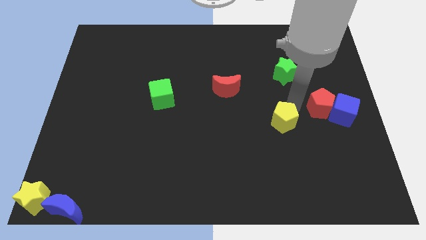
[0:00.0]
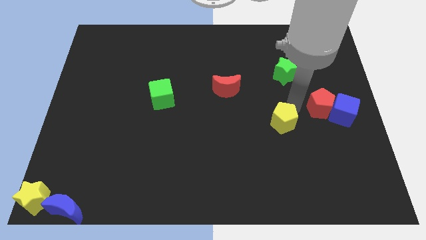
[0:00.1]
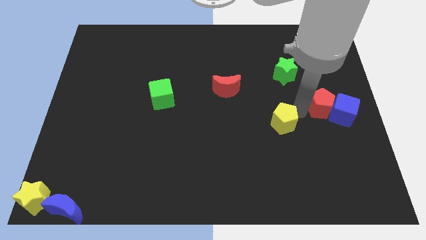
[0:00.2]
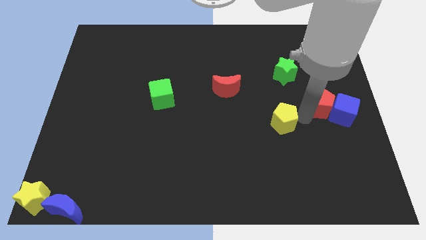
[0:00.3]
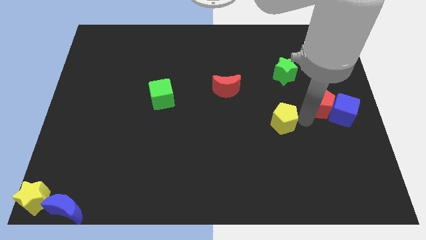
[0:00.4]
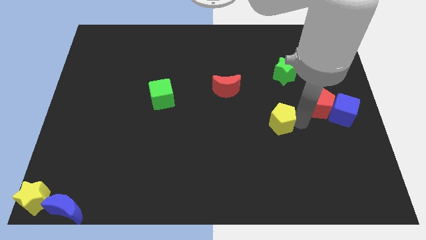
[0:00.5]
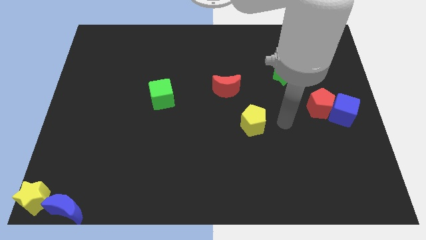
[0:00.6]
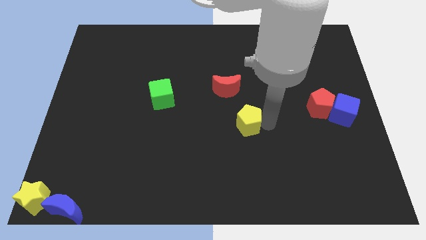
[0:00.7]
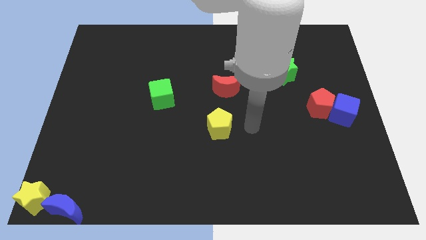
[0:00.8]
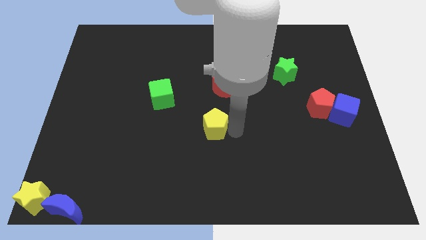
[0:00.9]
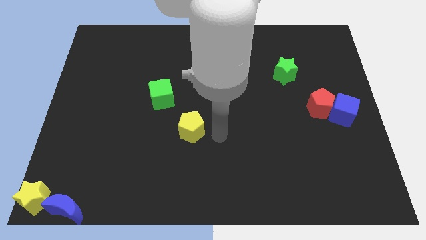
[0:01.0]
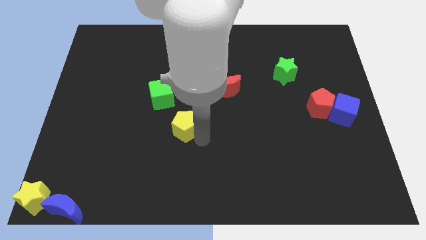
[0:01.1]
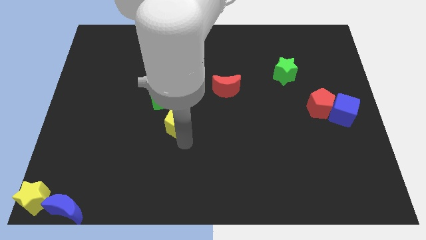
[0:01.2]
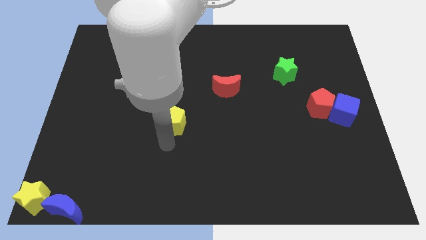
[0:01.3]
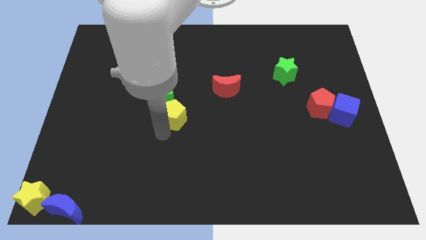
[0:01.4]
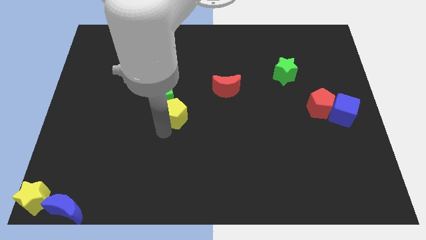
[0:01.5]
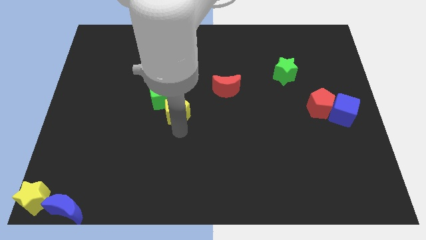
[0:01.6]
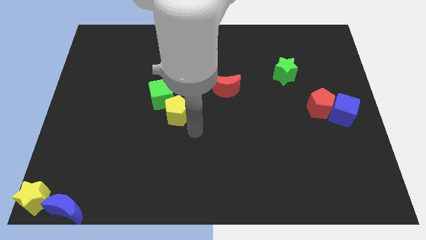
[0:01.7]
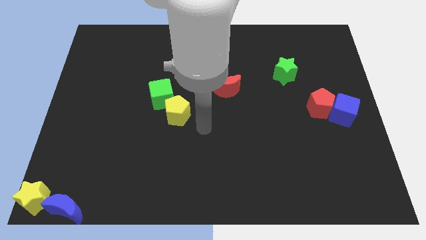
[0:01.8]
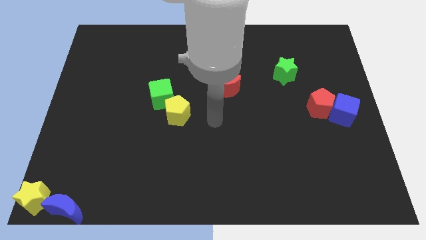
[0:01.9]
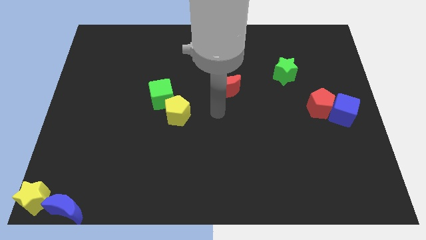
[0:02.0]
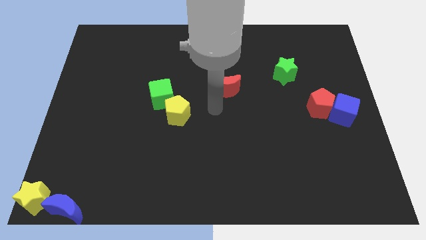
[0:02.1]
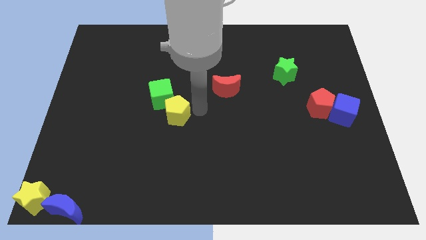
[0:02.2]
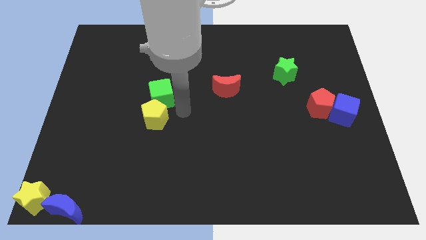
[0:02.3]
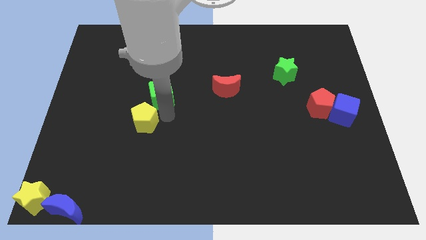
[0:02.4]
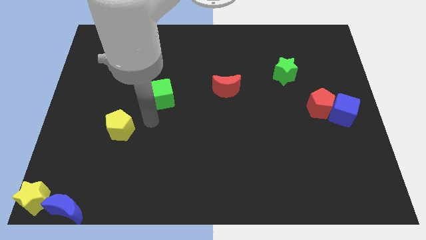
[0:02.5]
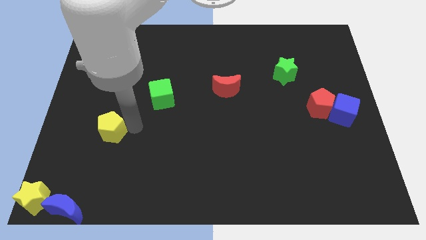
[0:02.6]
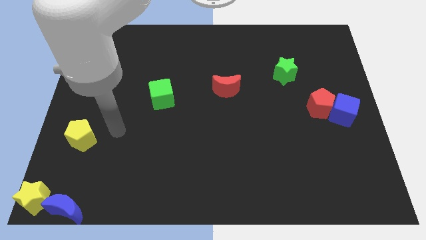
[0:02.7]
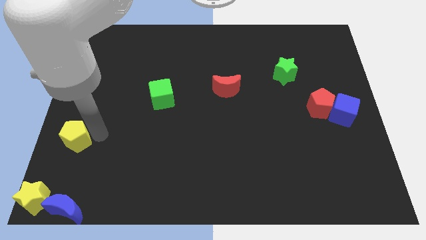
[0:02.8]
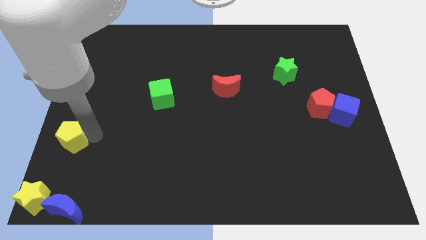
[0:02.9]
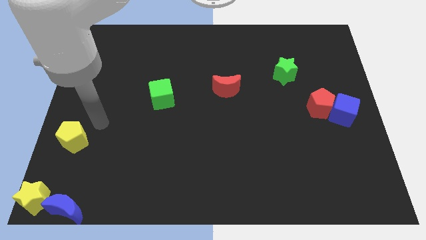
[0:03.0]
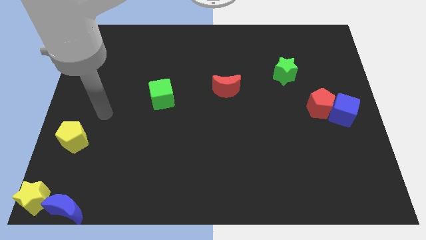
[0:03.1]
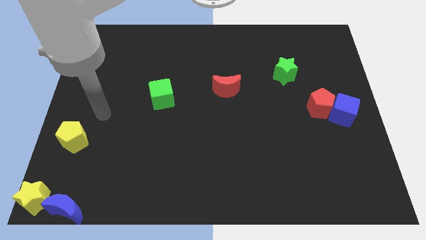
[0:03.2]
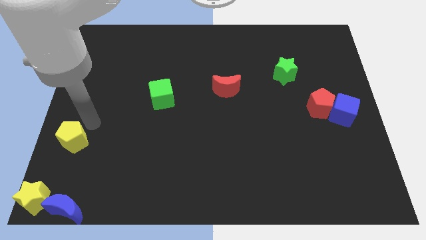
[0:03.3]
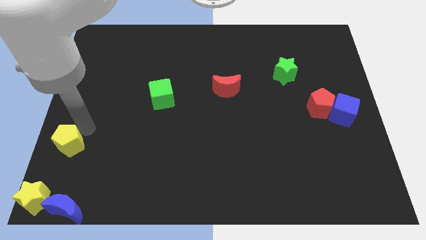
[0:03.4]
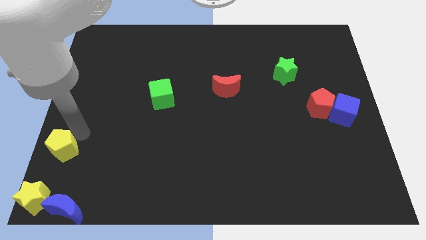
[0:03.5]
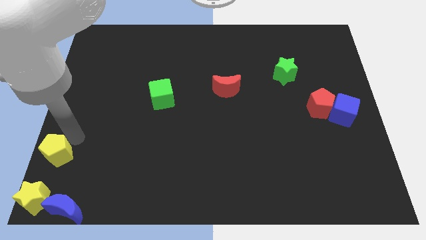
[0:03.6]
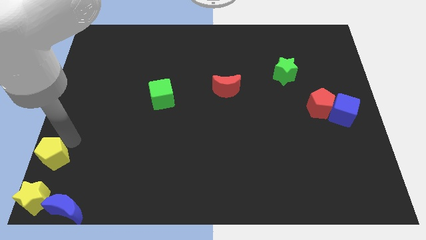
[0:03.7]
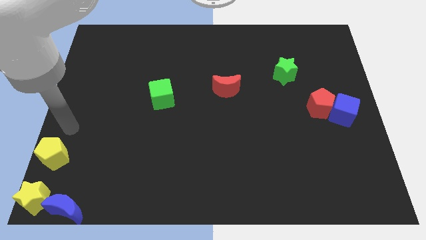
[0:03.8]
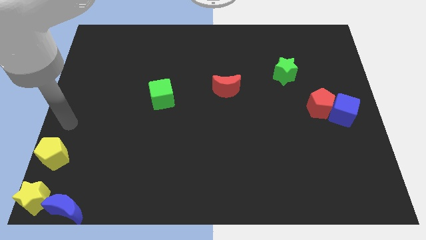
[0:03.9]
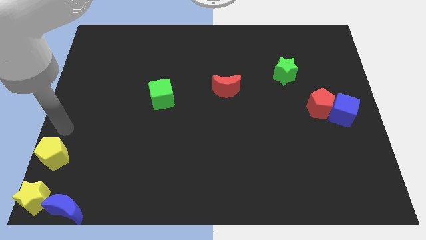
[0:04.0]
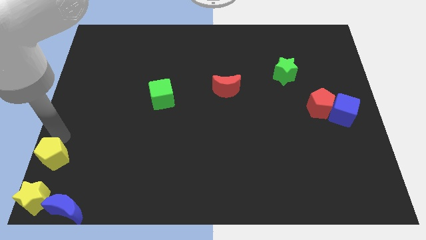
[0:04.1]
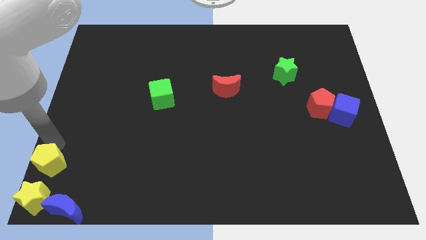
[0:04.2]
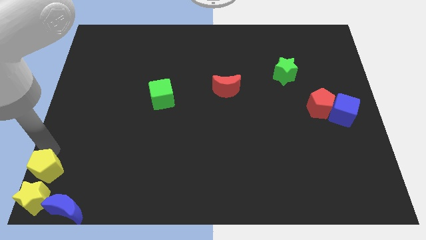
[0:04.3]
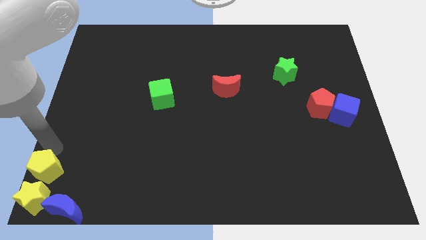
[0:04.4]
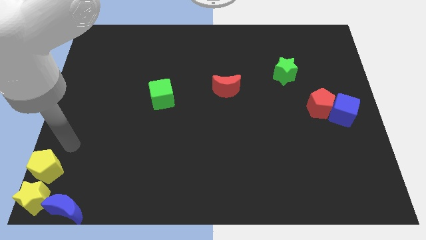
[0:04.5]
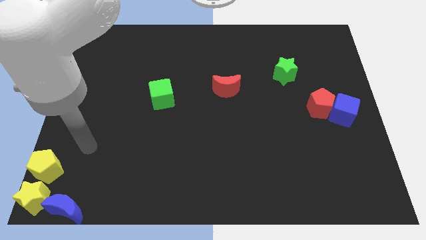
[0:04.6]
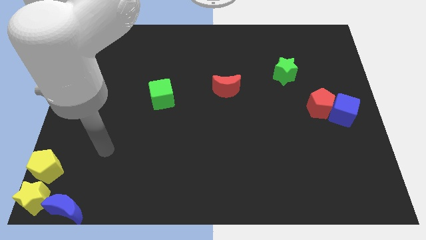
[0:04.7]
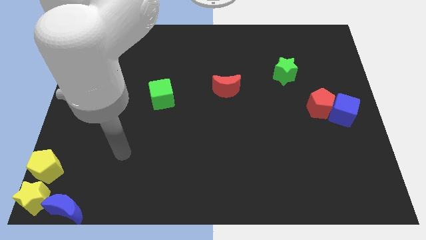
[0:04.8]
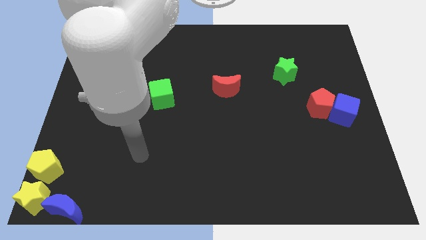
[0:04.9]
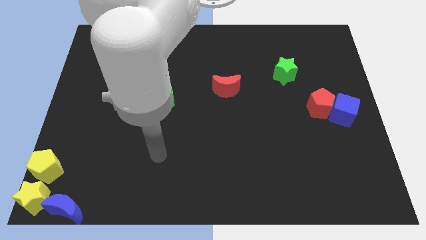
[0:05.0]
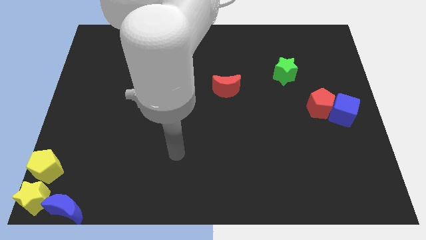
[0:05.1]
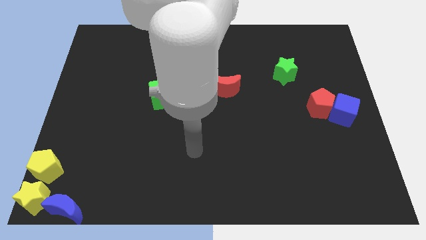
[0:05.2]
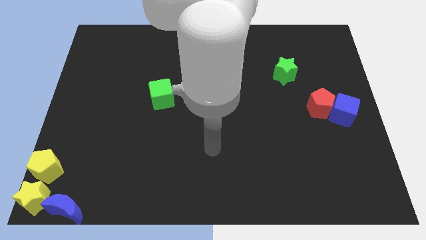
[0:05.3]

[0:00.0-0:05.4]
push the yellow pentagon towards the bottom left corner

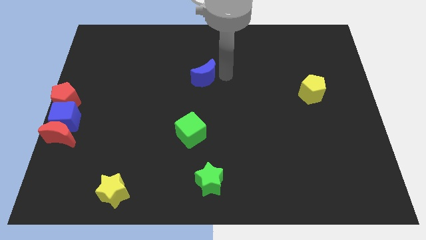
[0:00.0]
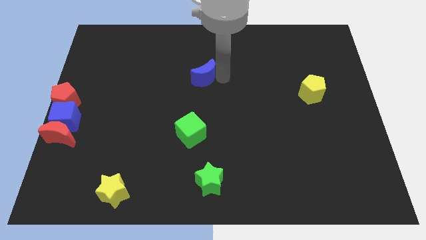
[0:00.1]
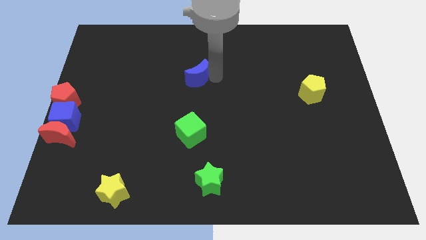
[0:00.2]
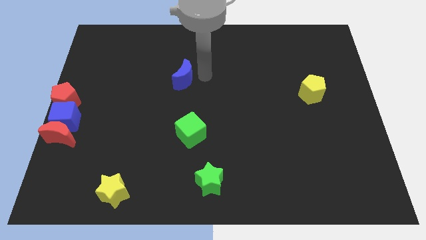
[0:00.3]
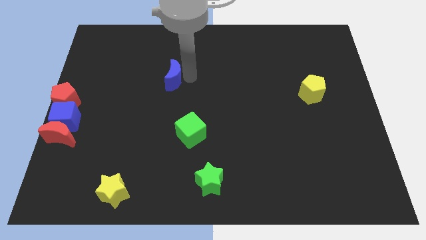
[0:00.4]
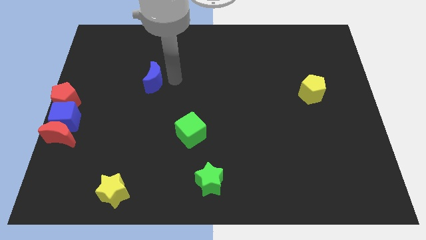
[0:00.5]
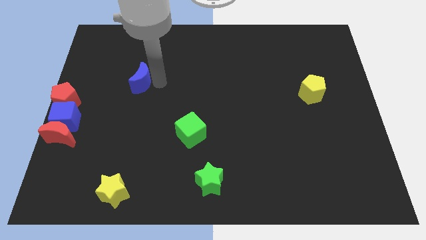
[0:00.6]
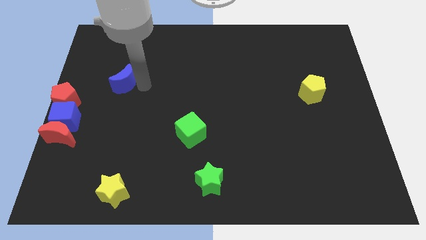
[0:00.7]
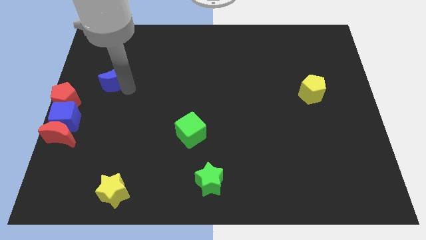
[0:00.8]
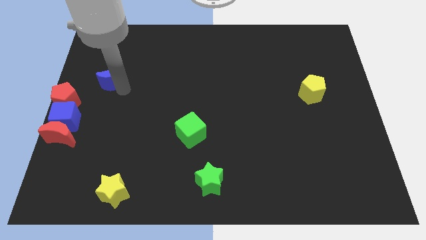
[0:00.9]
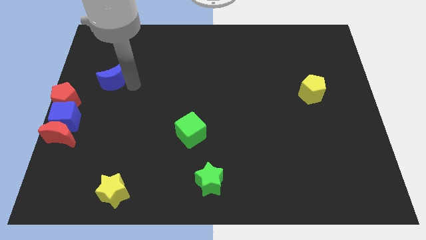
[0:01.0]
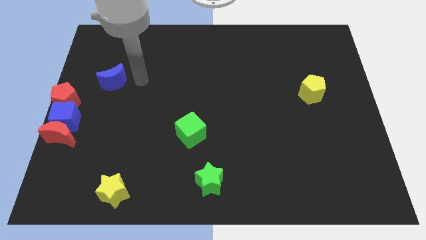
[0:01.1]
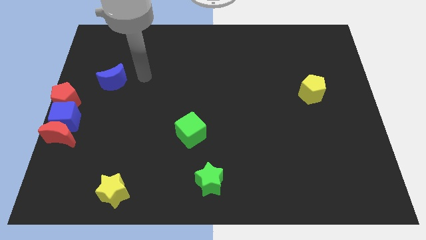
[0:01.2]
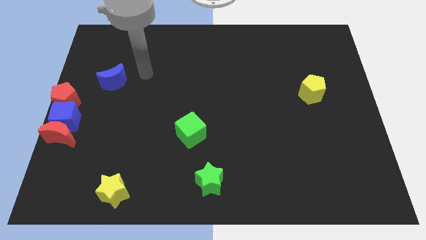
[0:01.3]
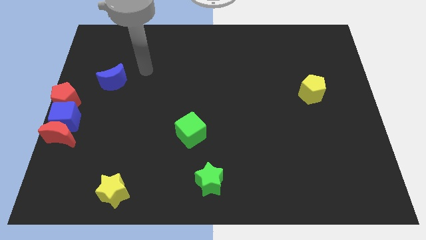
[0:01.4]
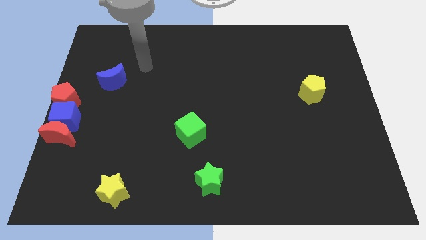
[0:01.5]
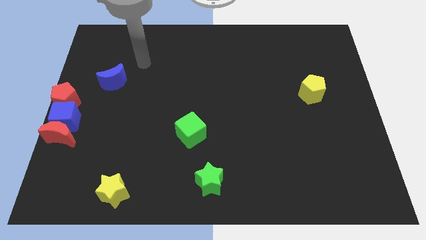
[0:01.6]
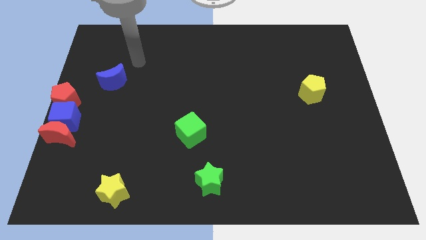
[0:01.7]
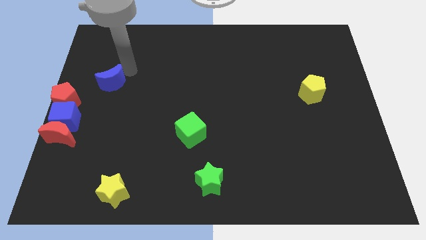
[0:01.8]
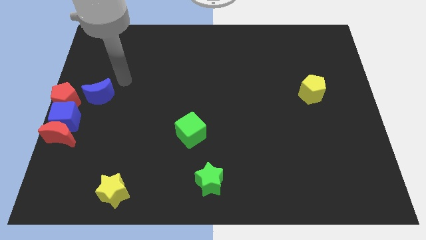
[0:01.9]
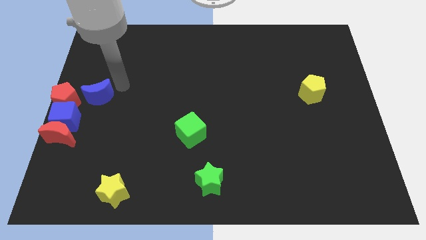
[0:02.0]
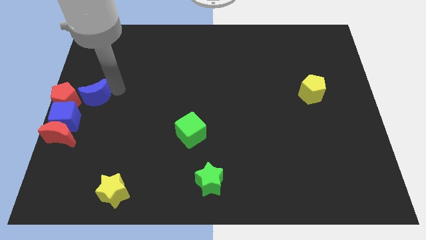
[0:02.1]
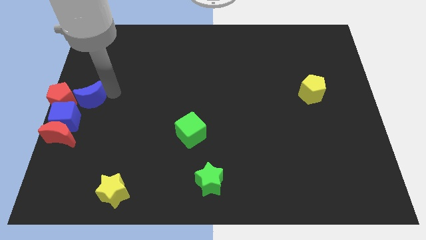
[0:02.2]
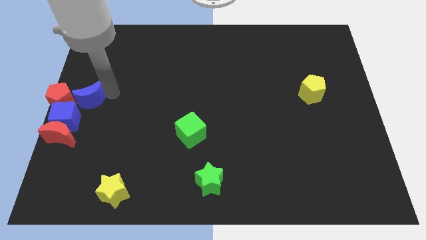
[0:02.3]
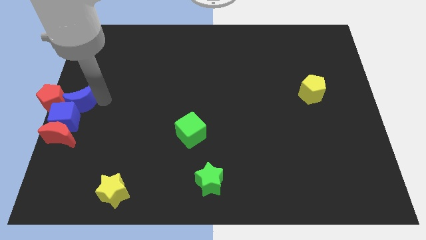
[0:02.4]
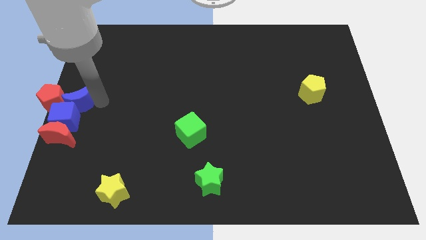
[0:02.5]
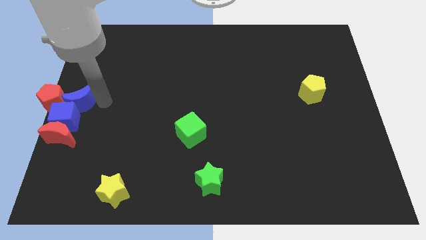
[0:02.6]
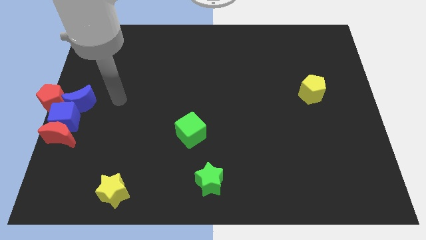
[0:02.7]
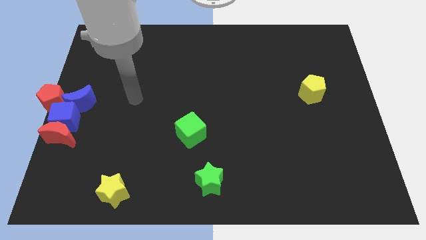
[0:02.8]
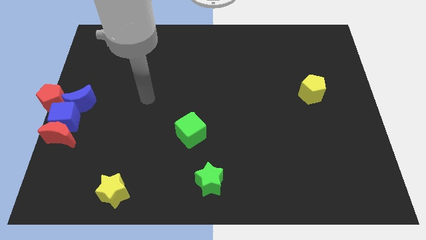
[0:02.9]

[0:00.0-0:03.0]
push the blue crescent into the red pentagon

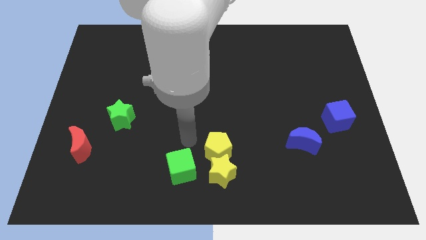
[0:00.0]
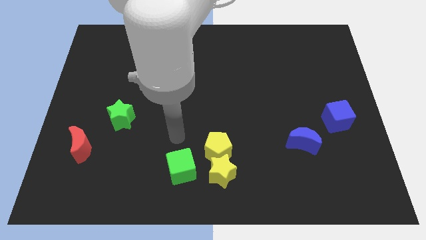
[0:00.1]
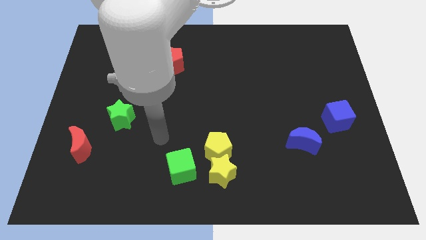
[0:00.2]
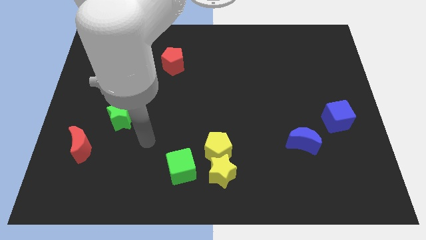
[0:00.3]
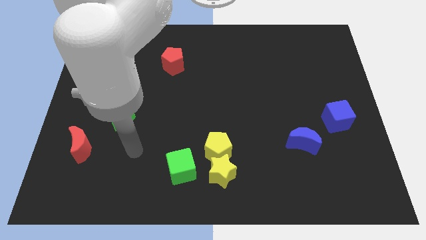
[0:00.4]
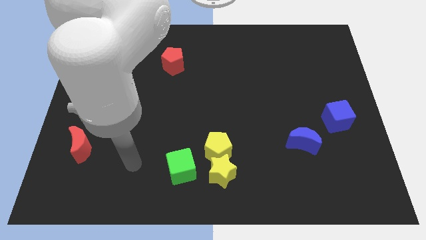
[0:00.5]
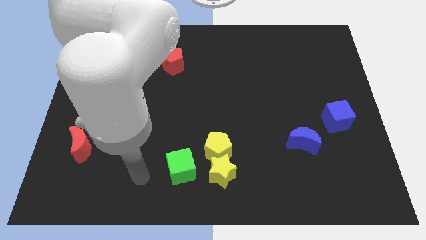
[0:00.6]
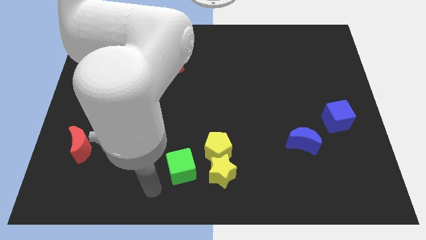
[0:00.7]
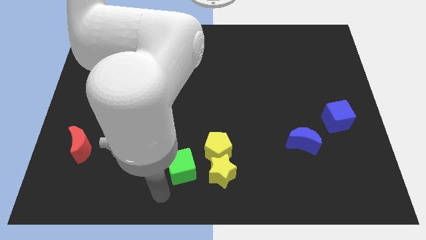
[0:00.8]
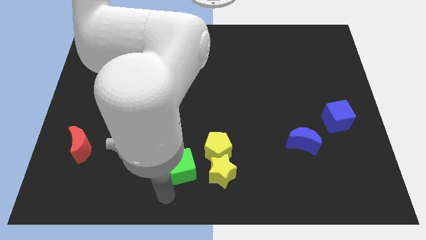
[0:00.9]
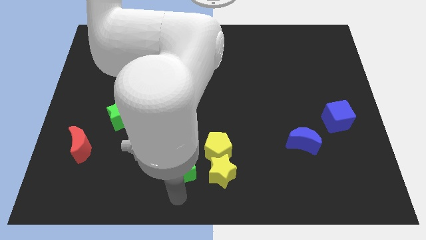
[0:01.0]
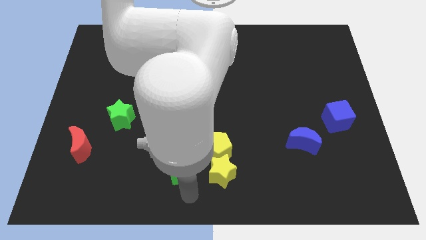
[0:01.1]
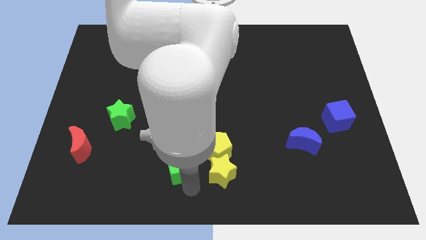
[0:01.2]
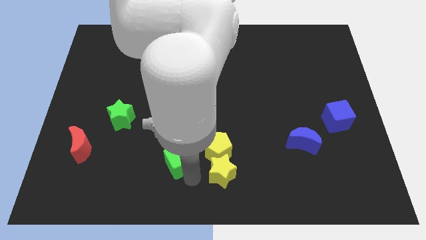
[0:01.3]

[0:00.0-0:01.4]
move your arm at the bottom of green cube
